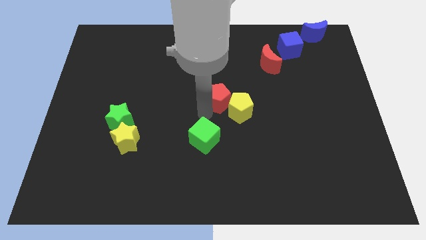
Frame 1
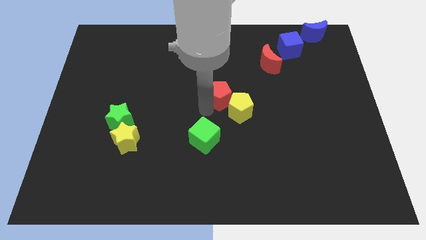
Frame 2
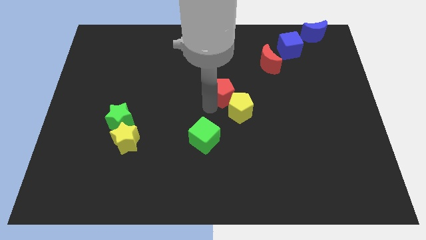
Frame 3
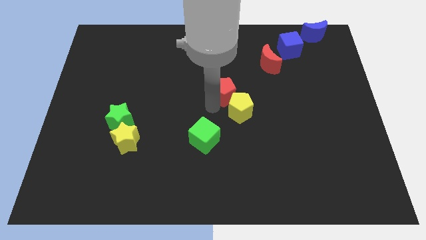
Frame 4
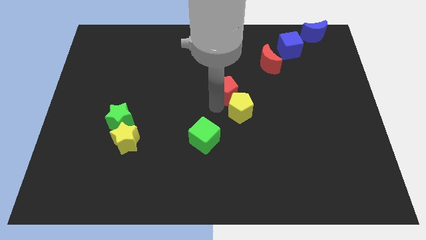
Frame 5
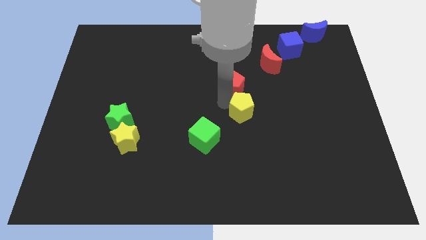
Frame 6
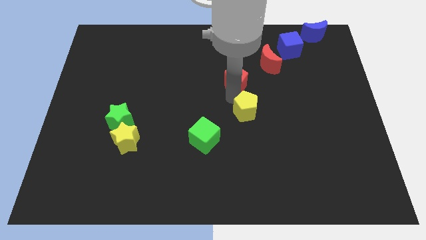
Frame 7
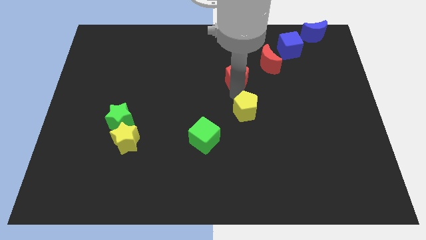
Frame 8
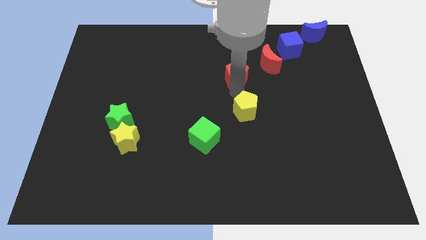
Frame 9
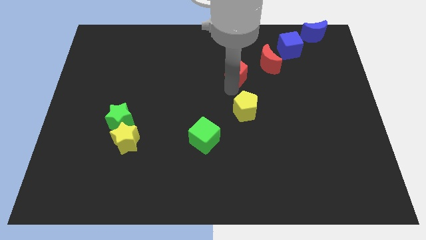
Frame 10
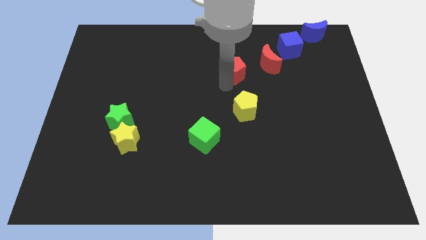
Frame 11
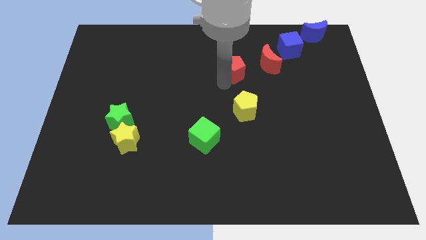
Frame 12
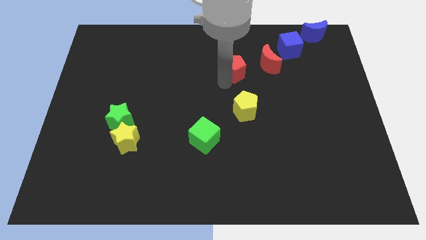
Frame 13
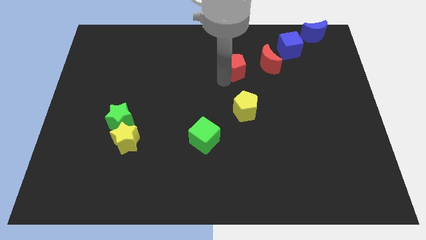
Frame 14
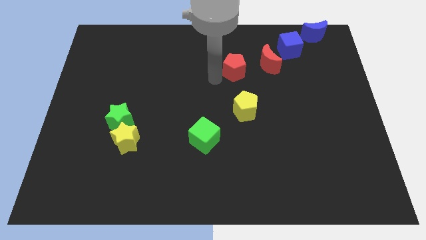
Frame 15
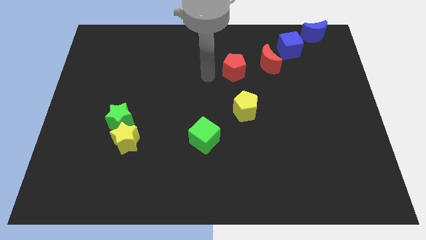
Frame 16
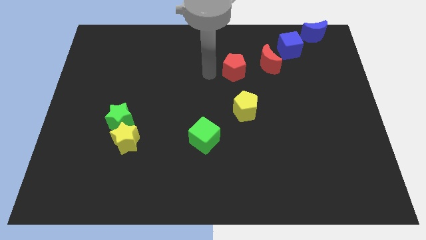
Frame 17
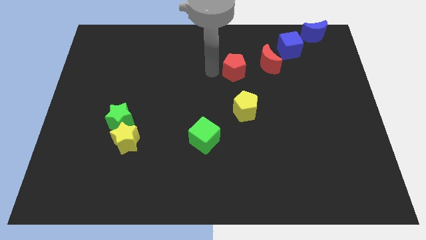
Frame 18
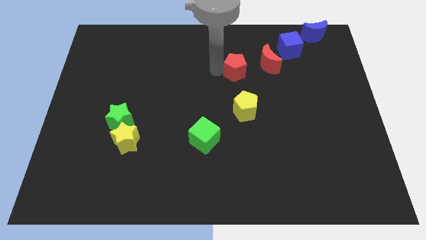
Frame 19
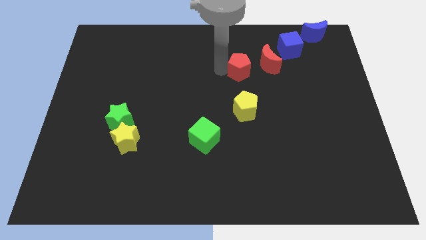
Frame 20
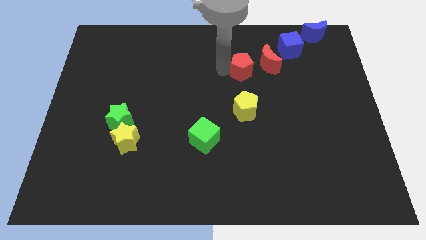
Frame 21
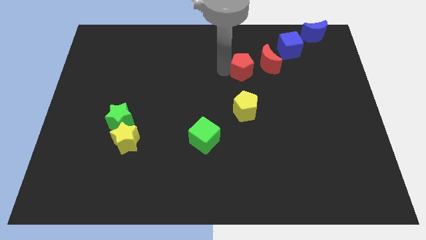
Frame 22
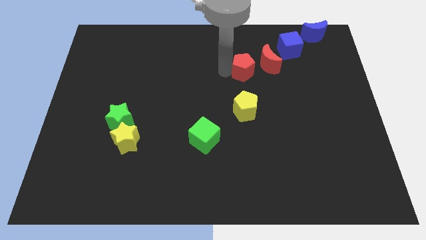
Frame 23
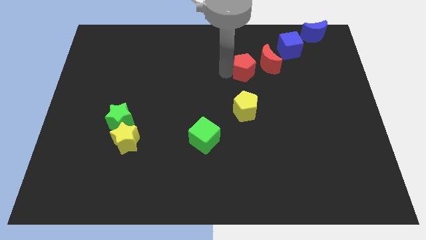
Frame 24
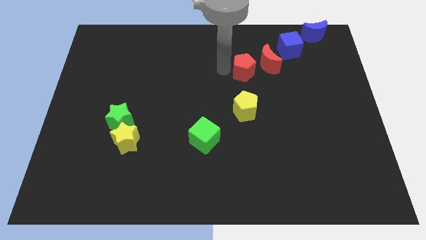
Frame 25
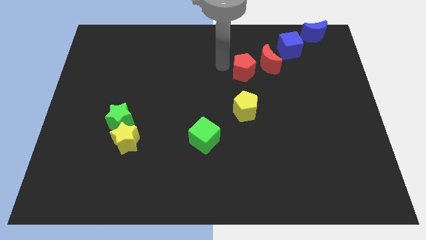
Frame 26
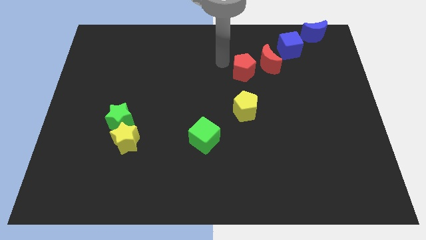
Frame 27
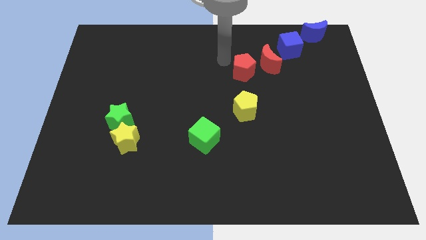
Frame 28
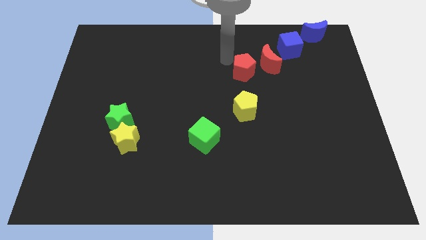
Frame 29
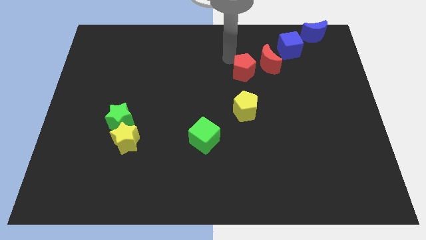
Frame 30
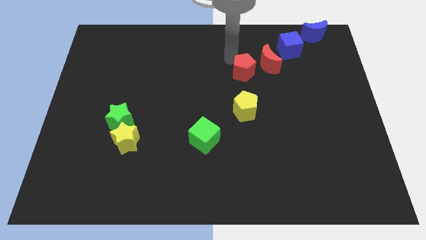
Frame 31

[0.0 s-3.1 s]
separate red pentagon from yellow pentagon

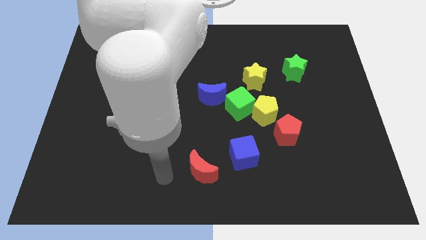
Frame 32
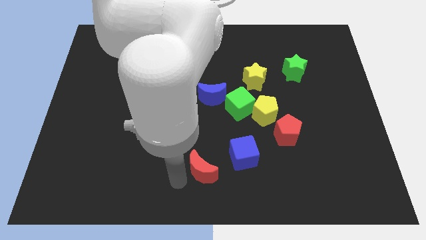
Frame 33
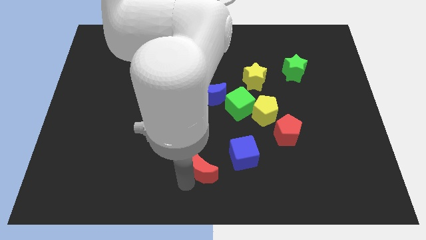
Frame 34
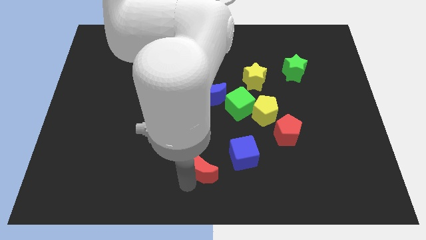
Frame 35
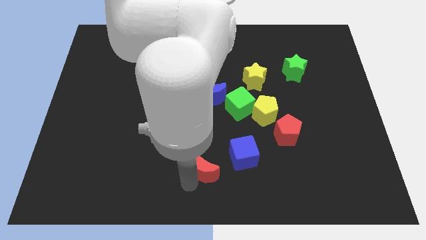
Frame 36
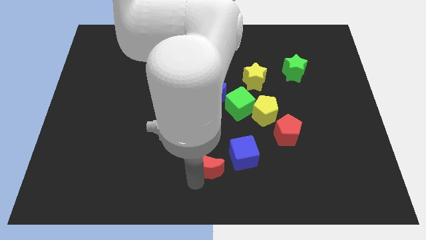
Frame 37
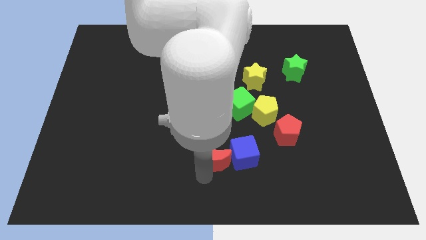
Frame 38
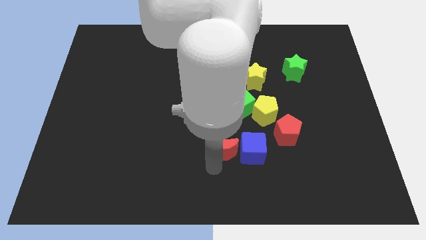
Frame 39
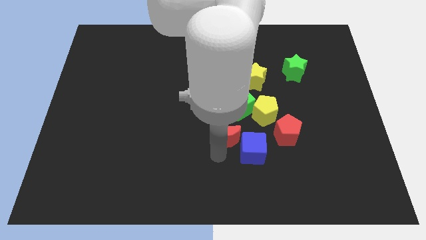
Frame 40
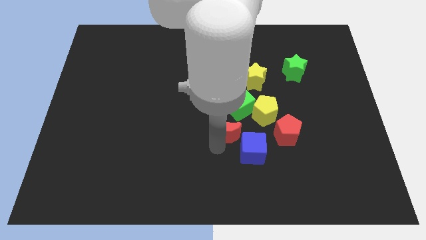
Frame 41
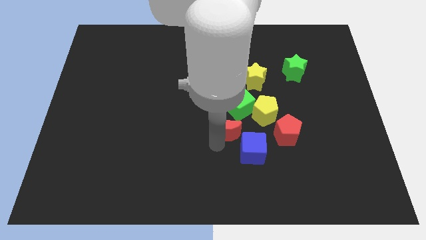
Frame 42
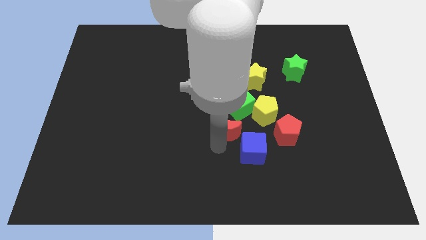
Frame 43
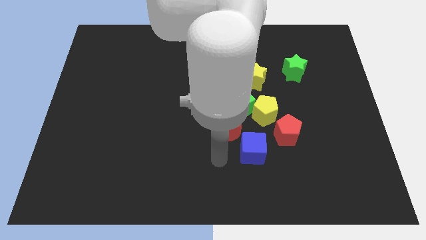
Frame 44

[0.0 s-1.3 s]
move the blue cube with the red moon

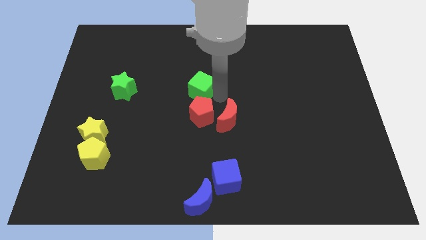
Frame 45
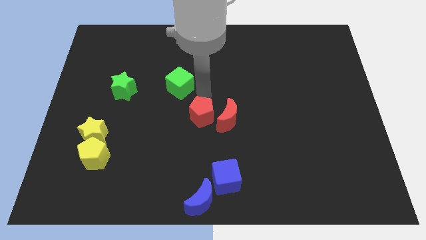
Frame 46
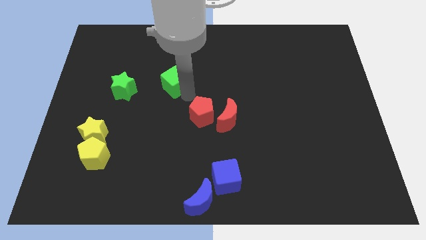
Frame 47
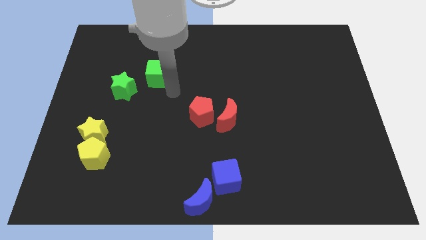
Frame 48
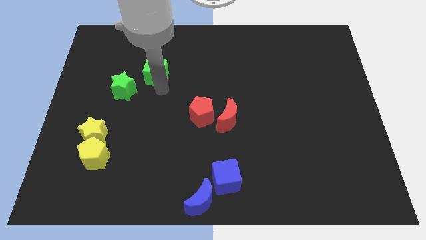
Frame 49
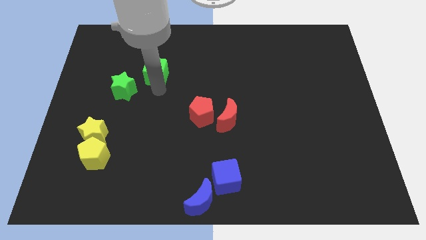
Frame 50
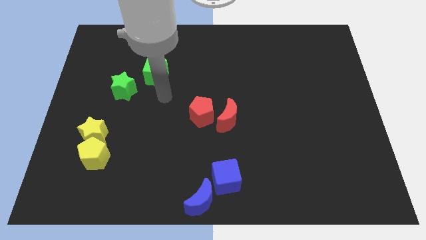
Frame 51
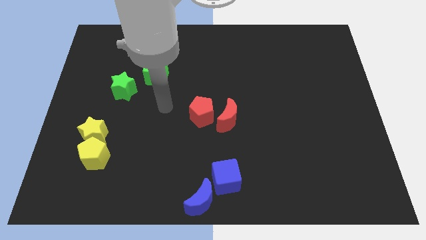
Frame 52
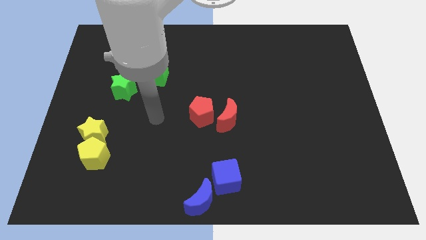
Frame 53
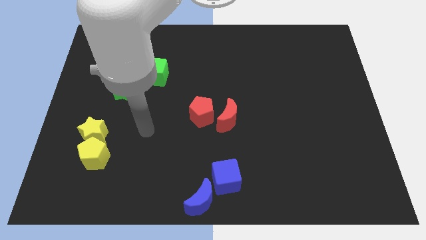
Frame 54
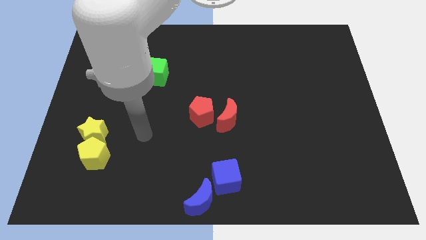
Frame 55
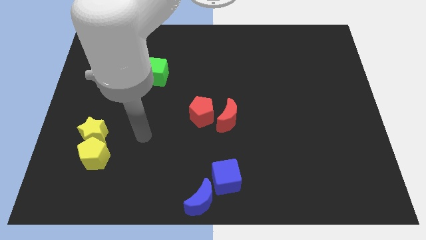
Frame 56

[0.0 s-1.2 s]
slide the green cube to the top right side of the green star

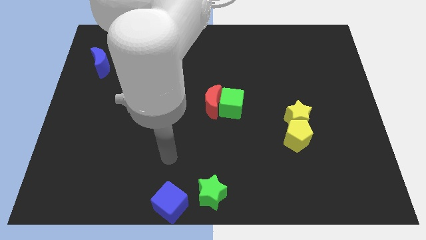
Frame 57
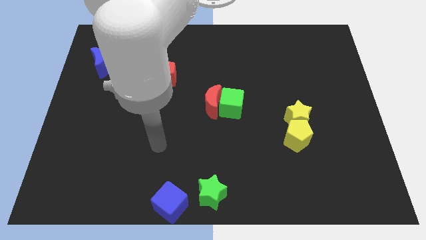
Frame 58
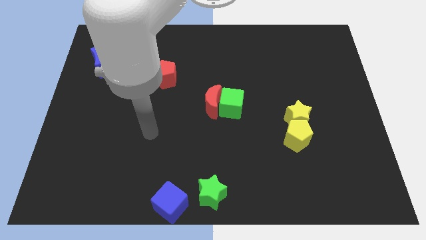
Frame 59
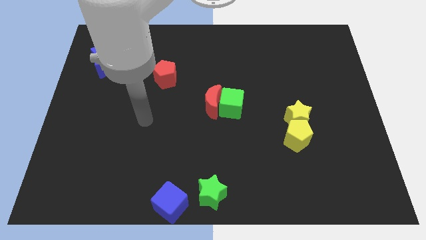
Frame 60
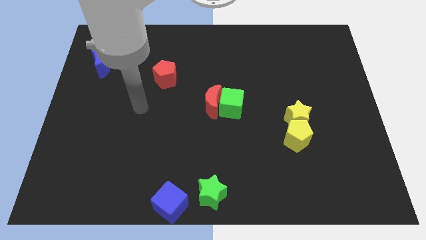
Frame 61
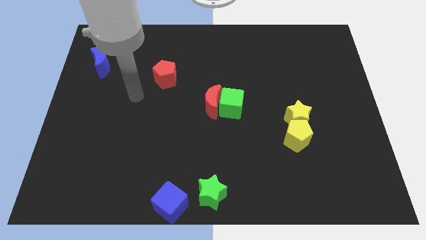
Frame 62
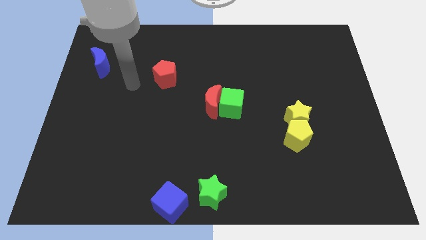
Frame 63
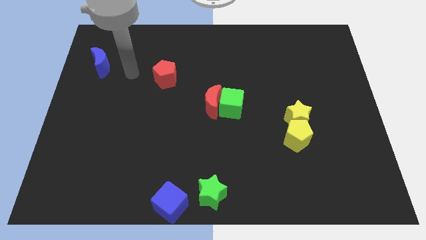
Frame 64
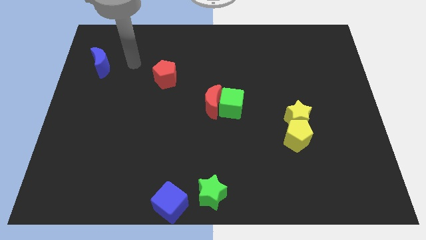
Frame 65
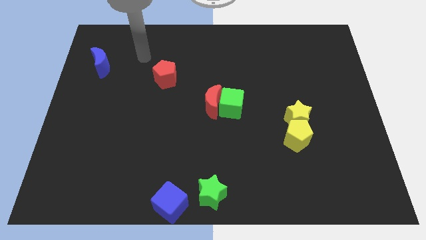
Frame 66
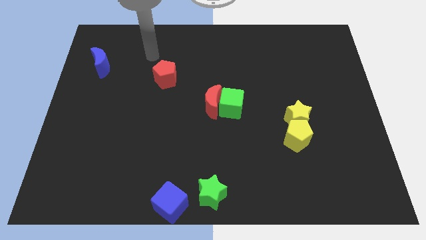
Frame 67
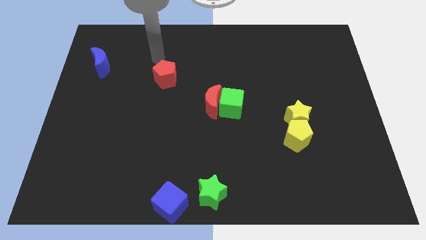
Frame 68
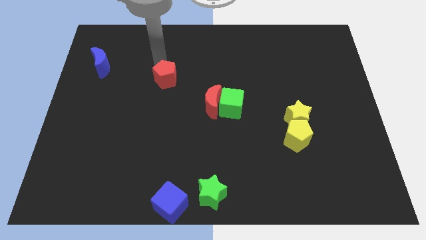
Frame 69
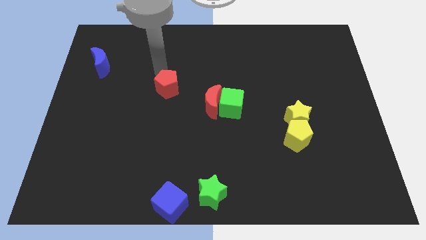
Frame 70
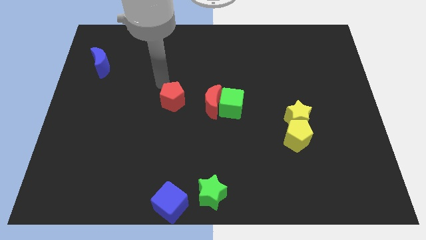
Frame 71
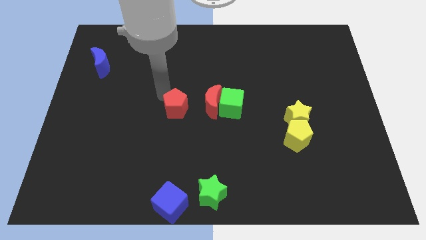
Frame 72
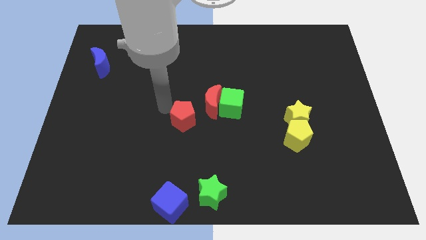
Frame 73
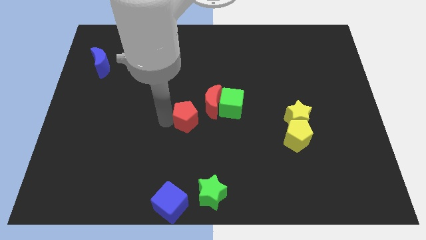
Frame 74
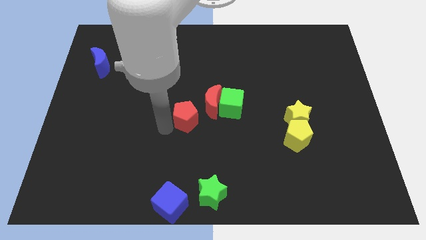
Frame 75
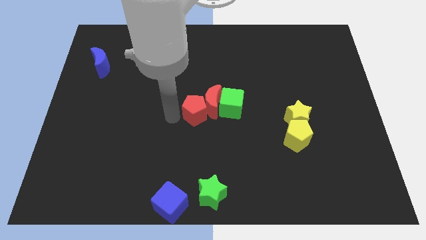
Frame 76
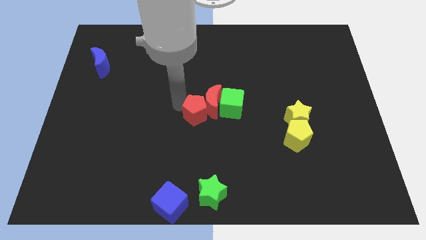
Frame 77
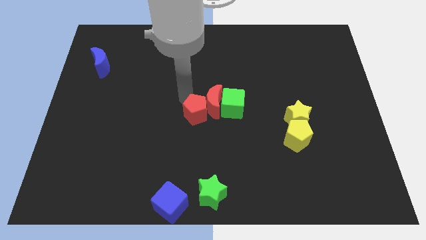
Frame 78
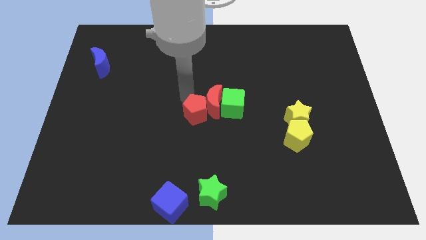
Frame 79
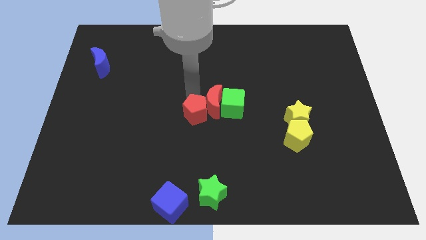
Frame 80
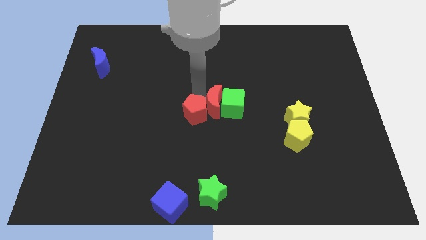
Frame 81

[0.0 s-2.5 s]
push the red pentagon into the red crescent

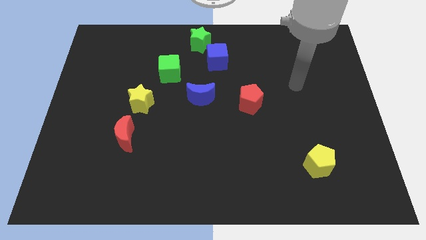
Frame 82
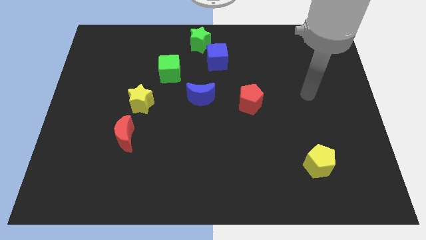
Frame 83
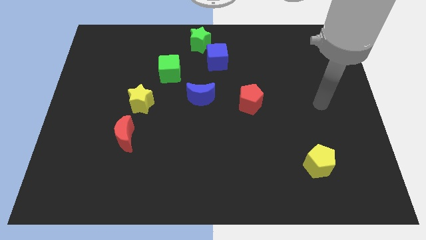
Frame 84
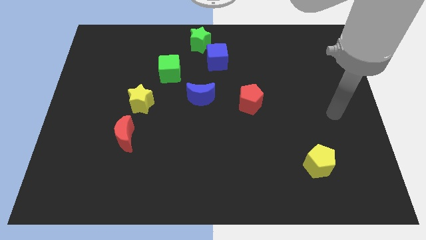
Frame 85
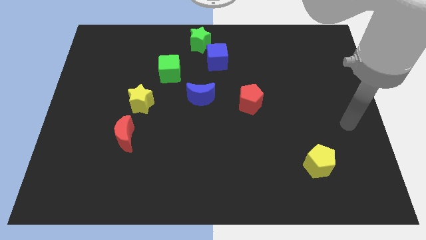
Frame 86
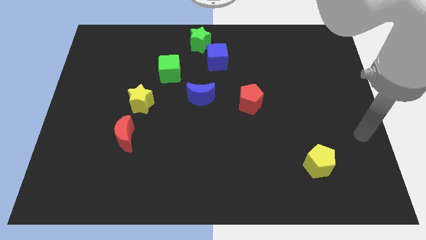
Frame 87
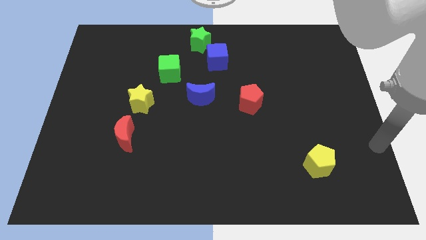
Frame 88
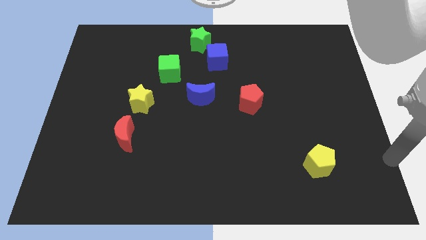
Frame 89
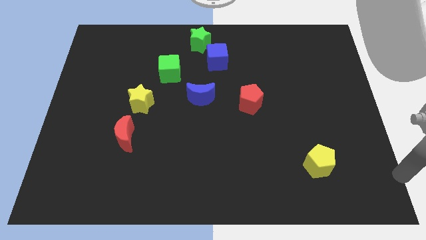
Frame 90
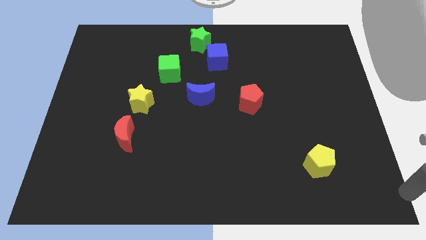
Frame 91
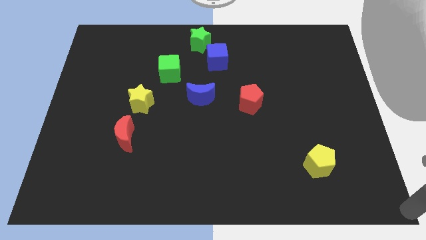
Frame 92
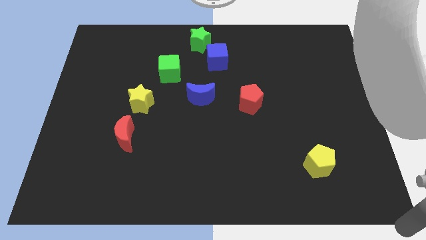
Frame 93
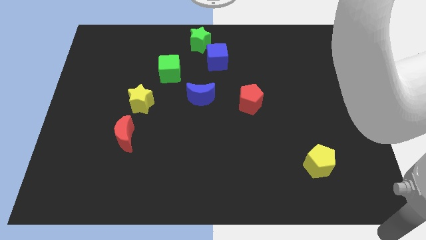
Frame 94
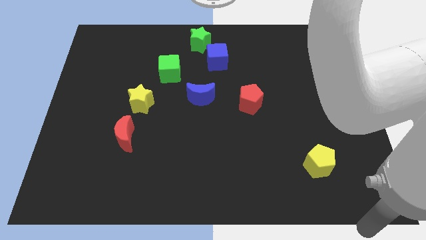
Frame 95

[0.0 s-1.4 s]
move your arm to the bottom of the yellow pentagon
